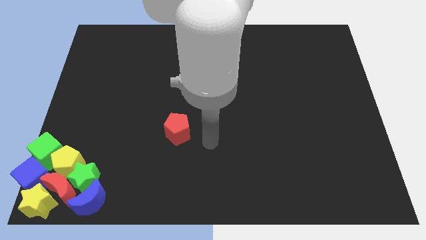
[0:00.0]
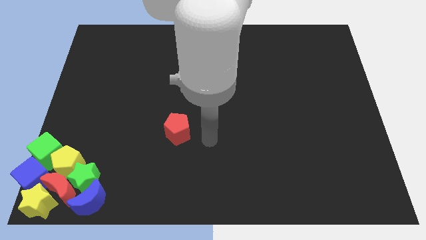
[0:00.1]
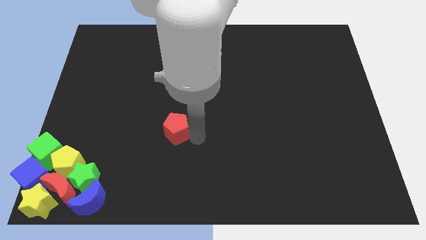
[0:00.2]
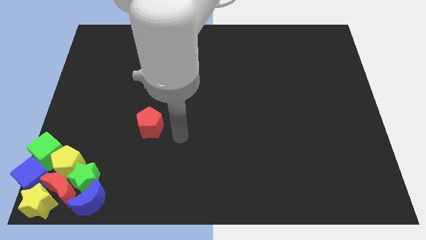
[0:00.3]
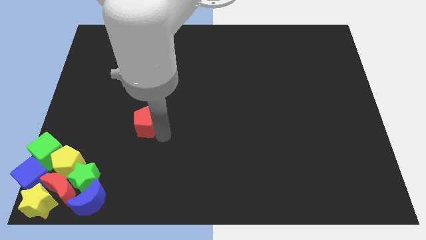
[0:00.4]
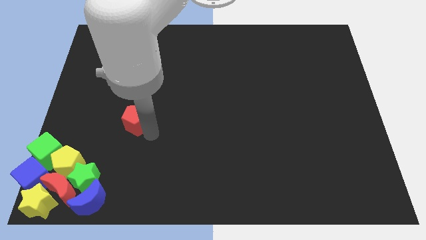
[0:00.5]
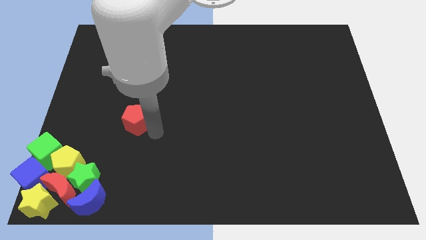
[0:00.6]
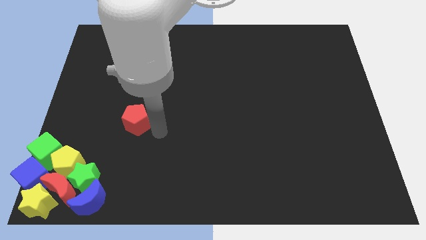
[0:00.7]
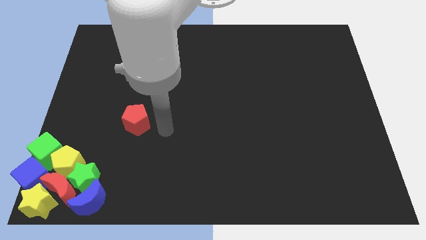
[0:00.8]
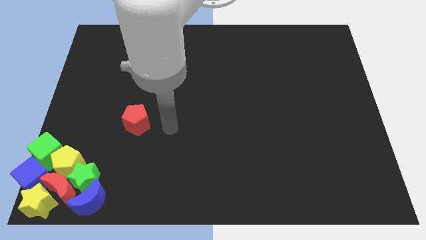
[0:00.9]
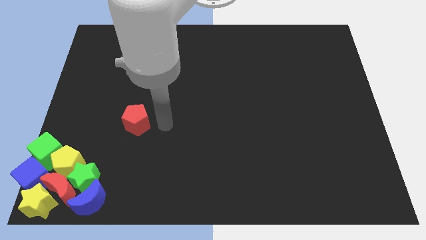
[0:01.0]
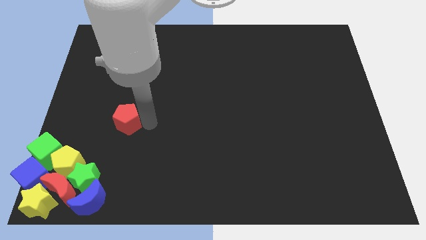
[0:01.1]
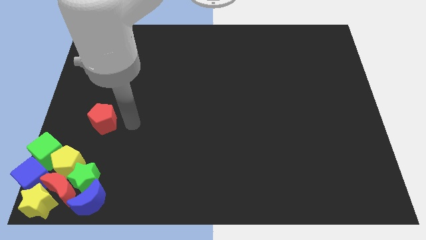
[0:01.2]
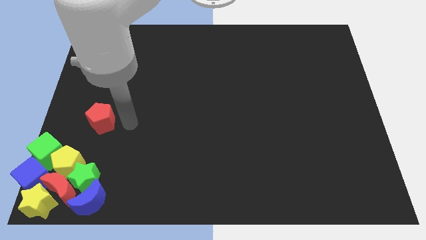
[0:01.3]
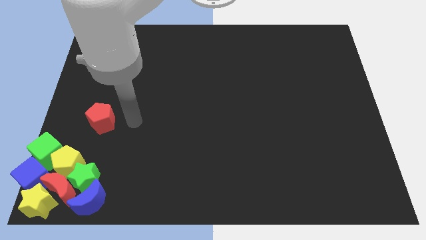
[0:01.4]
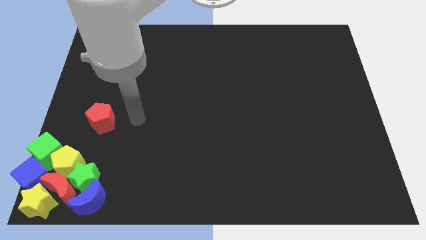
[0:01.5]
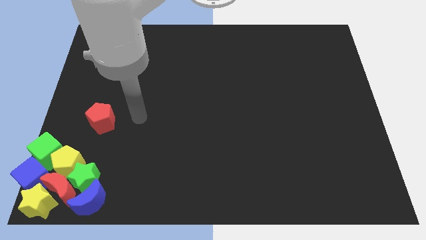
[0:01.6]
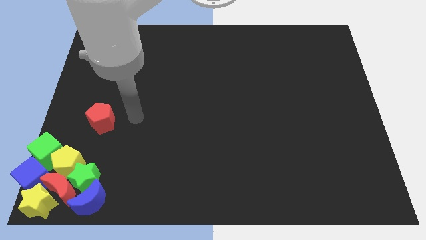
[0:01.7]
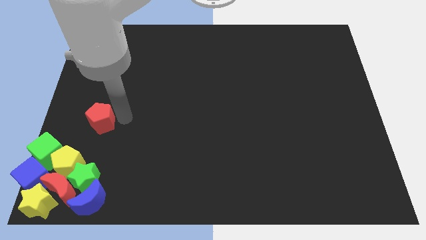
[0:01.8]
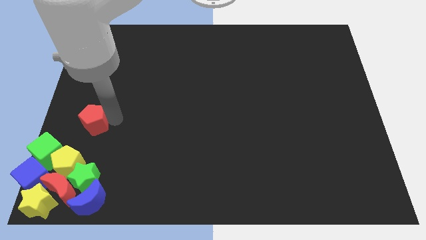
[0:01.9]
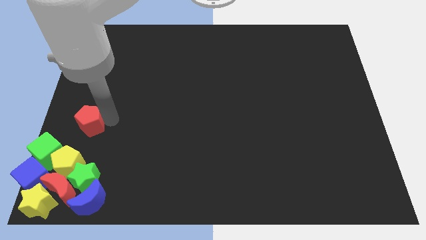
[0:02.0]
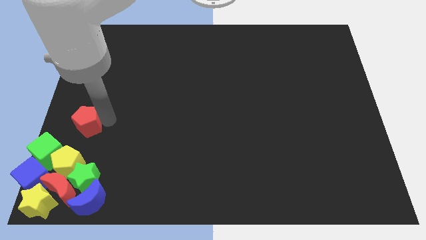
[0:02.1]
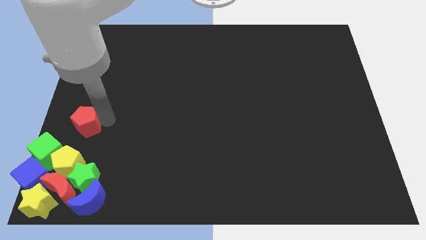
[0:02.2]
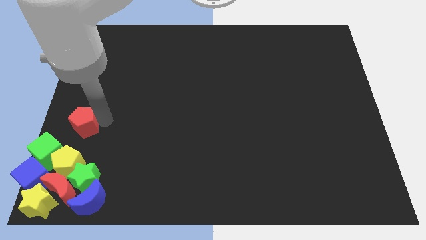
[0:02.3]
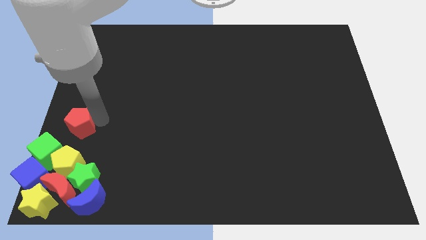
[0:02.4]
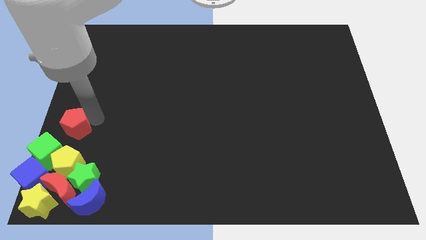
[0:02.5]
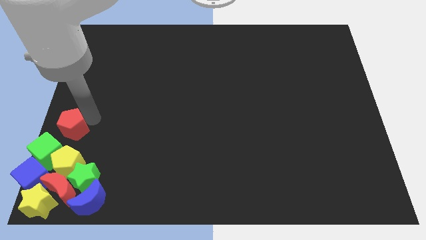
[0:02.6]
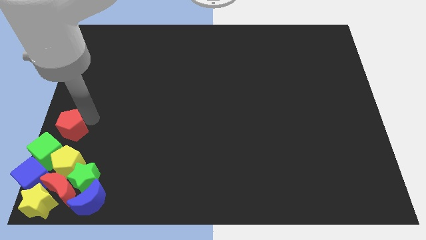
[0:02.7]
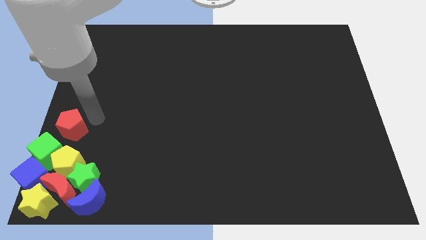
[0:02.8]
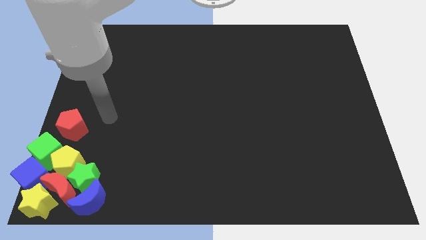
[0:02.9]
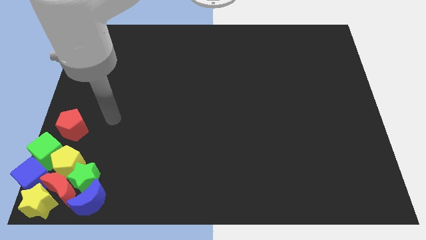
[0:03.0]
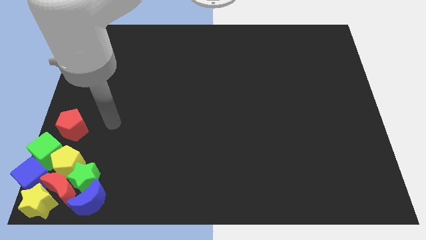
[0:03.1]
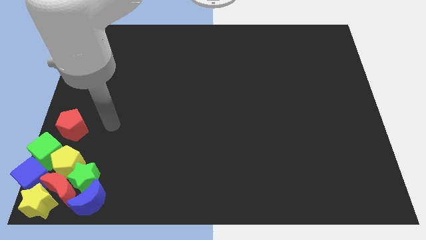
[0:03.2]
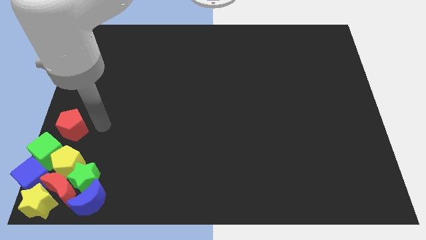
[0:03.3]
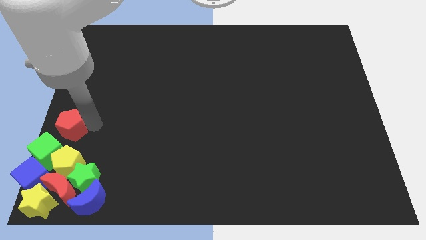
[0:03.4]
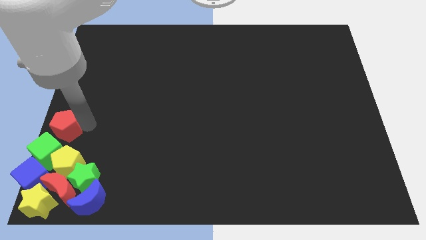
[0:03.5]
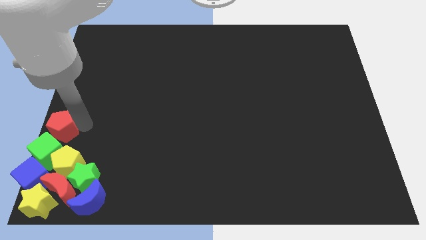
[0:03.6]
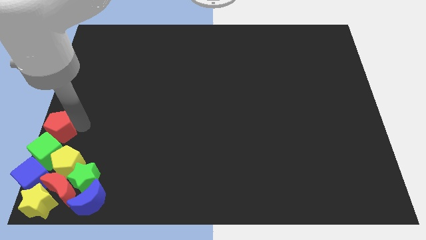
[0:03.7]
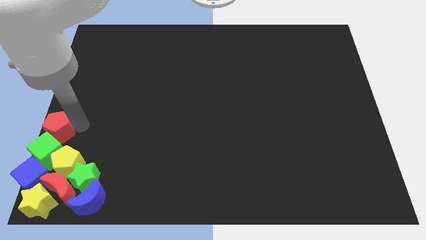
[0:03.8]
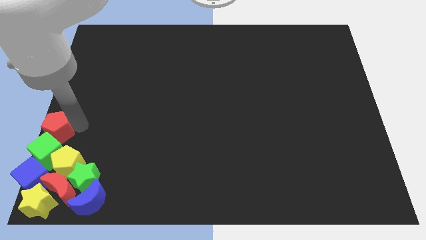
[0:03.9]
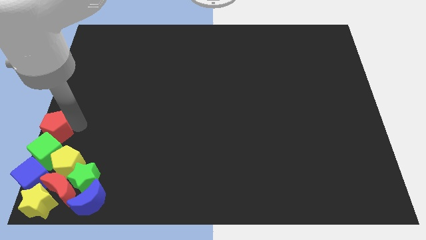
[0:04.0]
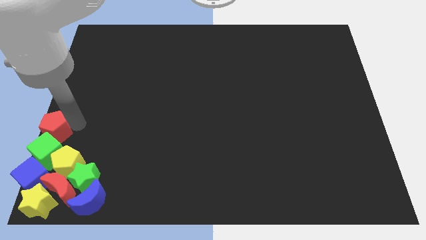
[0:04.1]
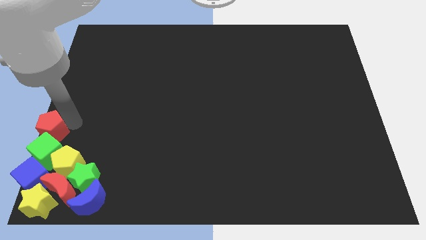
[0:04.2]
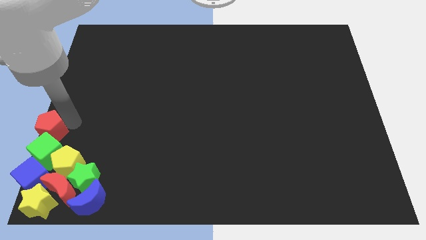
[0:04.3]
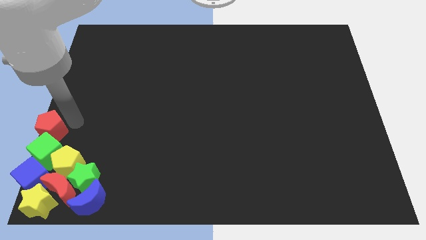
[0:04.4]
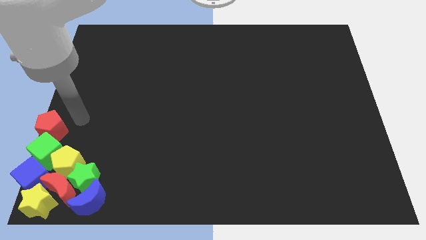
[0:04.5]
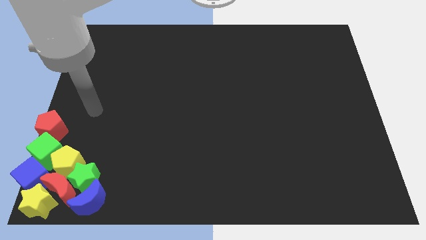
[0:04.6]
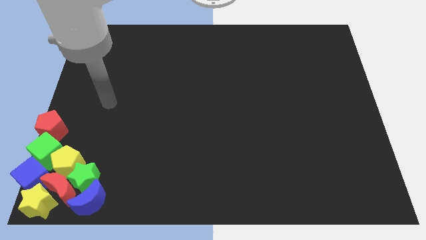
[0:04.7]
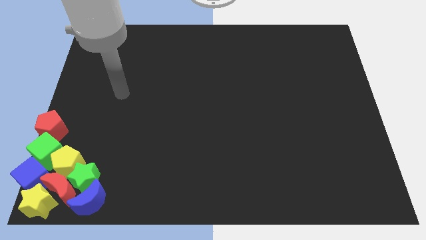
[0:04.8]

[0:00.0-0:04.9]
place the red pentagon above the green cube

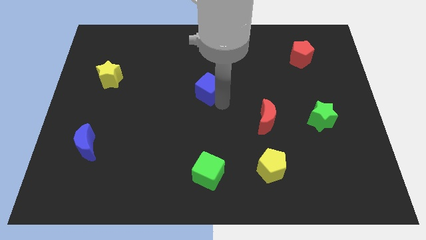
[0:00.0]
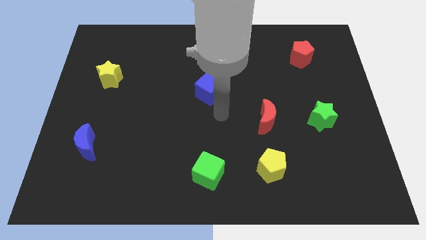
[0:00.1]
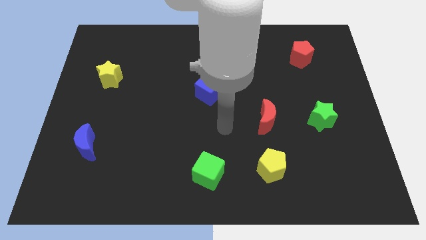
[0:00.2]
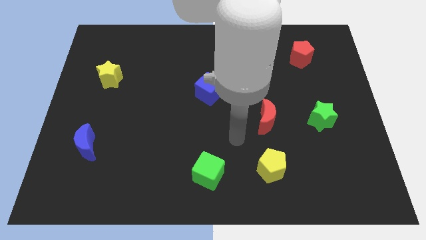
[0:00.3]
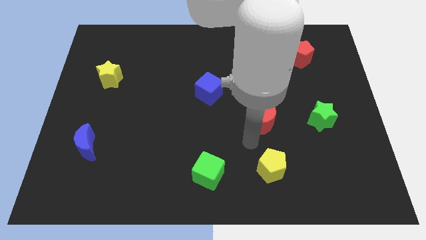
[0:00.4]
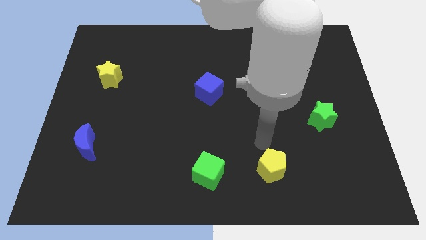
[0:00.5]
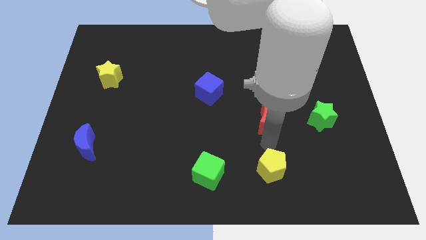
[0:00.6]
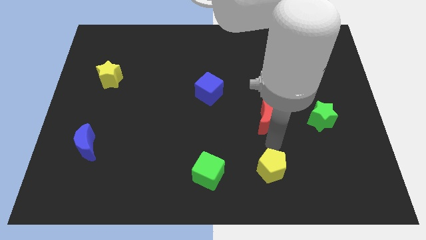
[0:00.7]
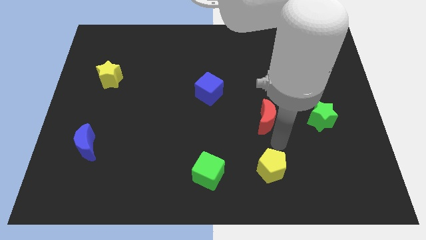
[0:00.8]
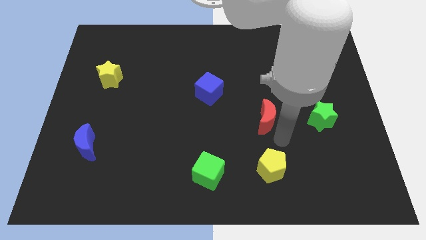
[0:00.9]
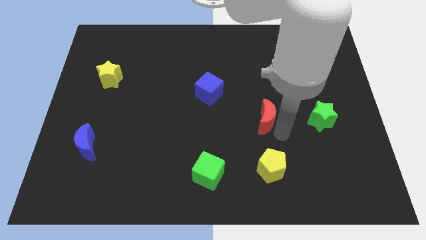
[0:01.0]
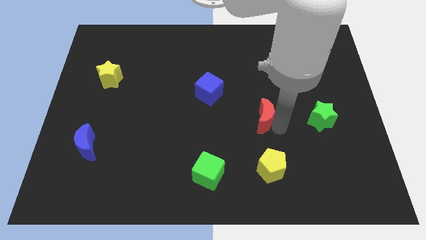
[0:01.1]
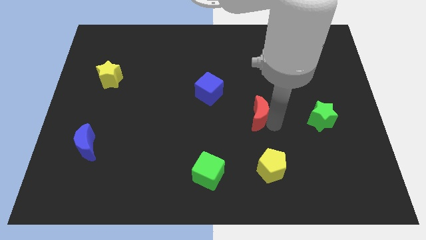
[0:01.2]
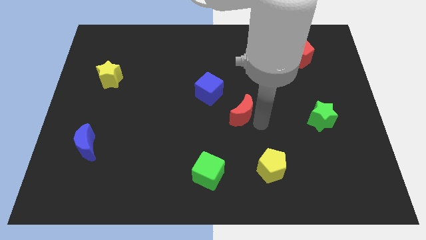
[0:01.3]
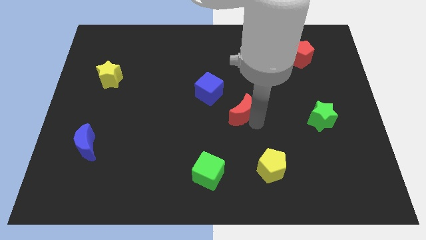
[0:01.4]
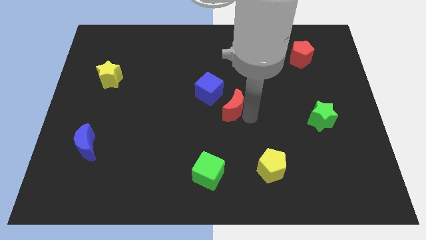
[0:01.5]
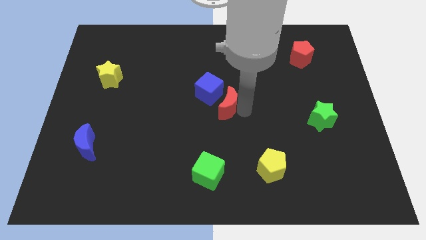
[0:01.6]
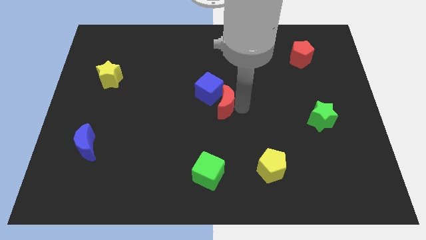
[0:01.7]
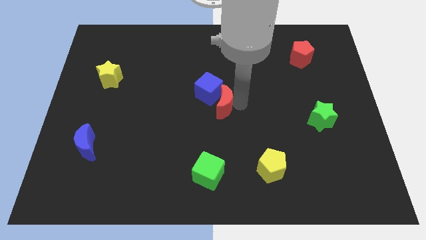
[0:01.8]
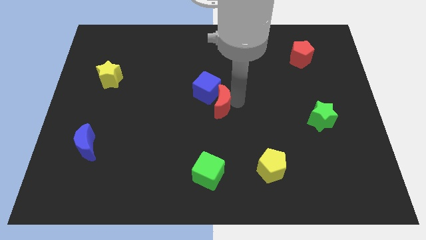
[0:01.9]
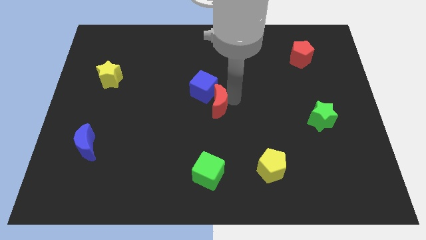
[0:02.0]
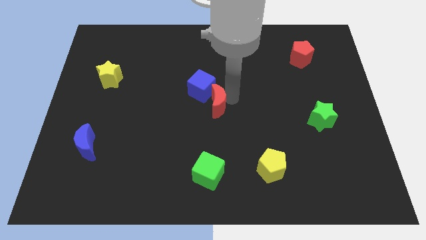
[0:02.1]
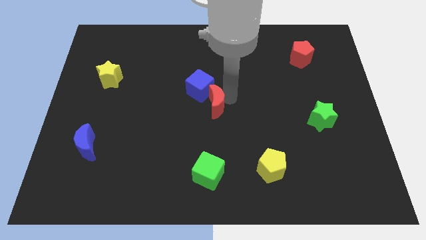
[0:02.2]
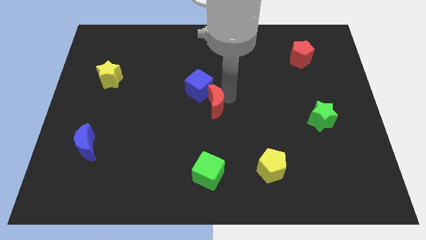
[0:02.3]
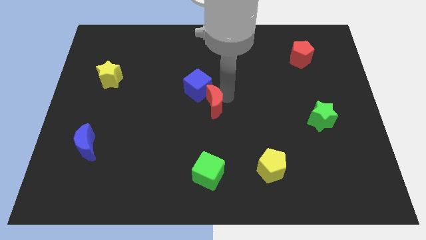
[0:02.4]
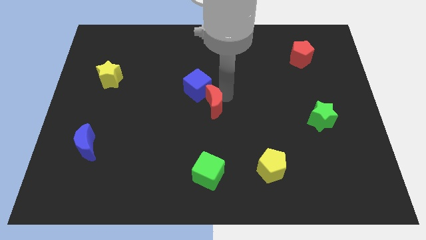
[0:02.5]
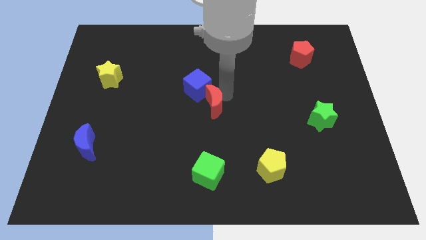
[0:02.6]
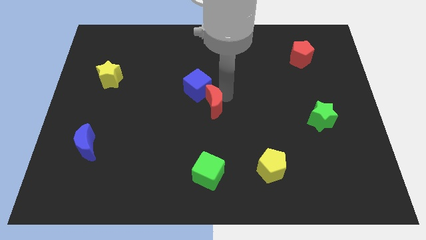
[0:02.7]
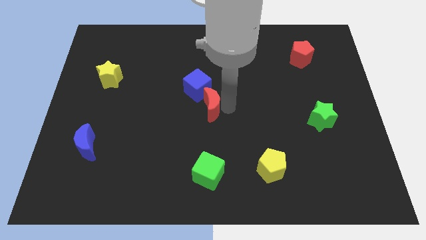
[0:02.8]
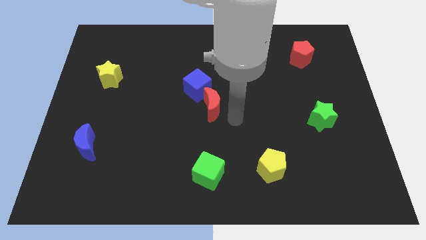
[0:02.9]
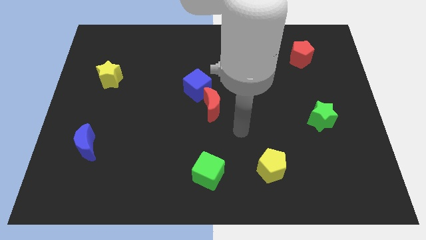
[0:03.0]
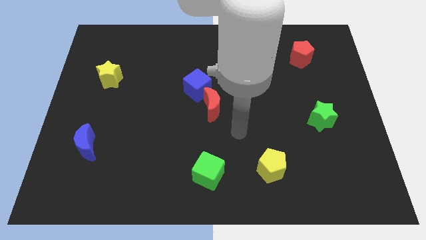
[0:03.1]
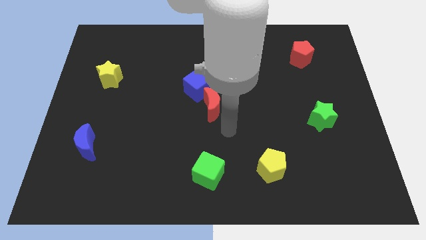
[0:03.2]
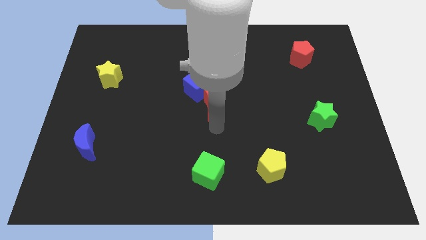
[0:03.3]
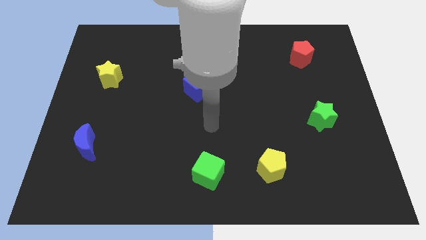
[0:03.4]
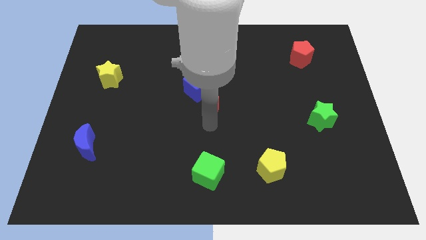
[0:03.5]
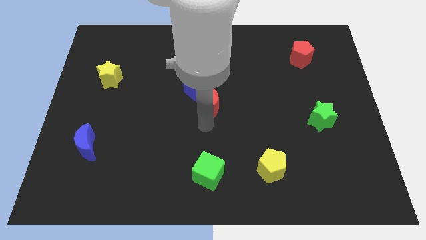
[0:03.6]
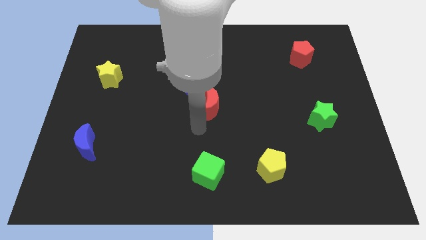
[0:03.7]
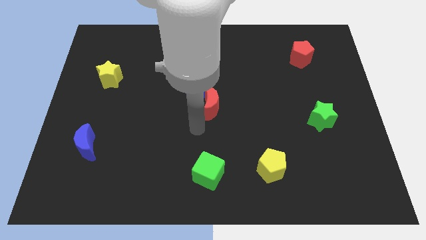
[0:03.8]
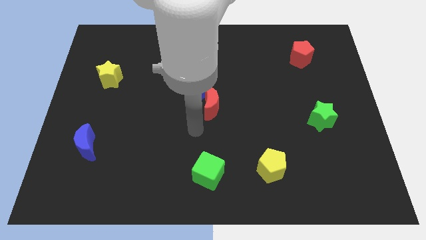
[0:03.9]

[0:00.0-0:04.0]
move the red crescent into the blue cube
